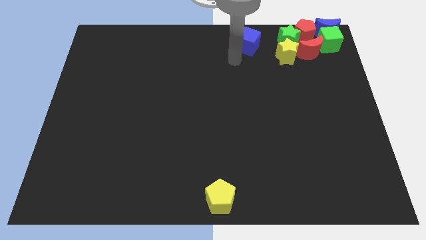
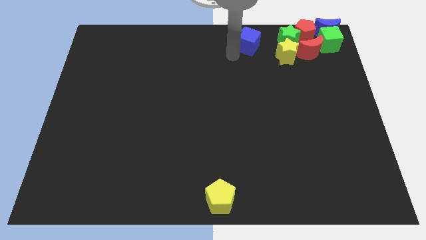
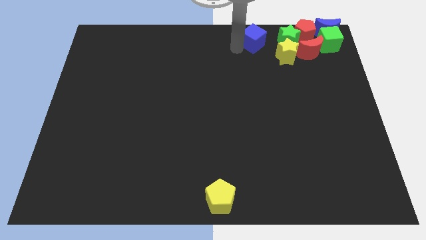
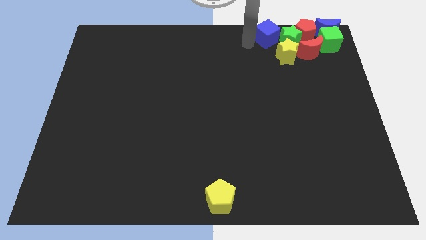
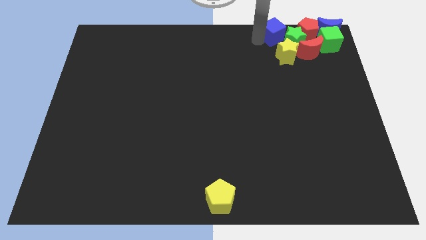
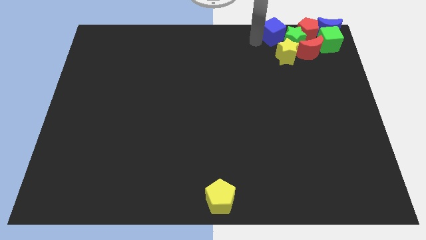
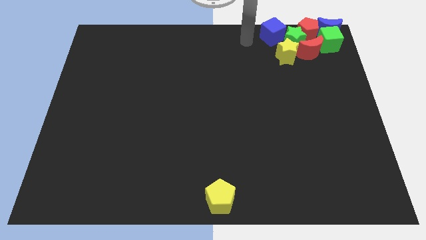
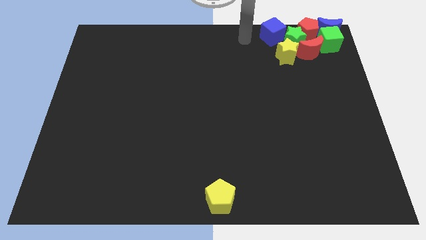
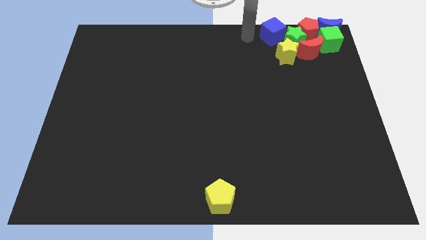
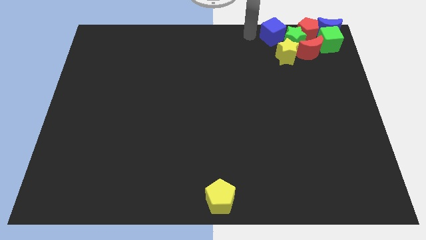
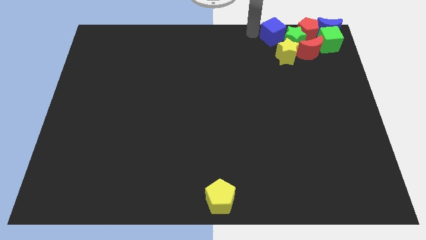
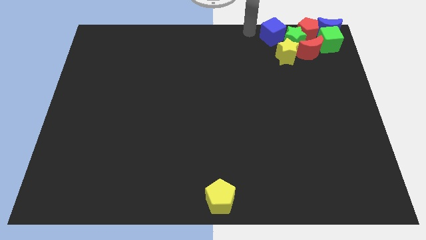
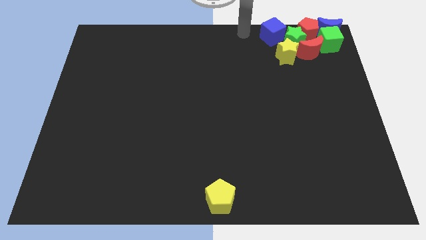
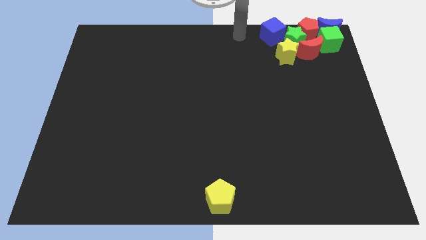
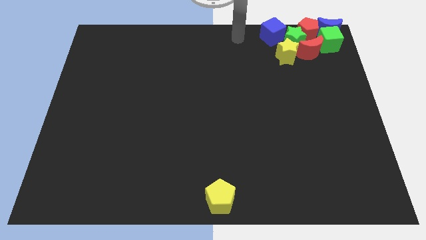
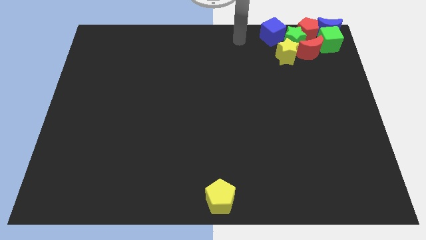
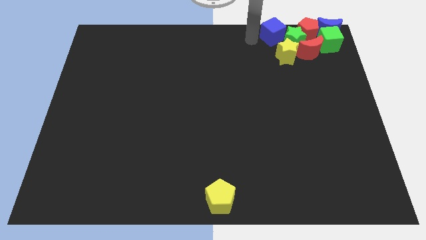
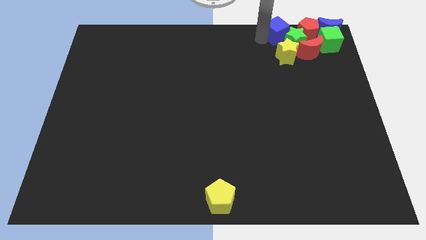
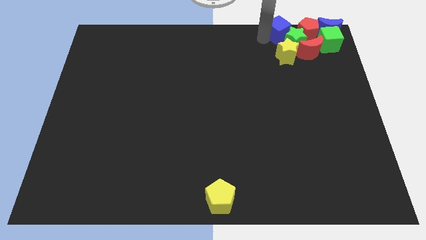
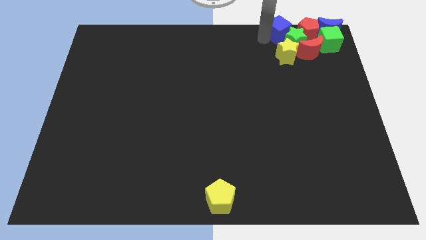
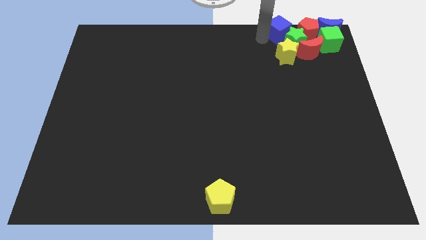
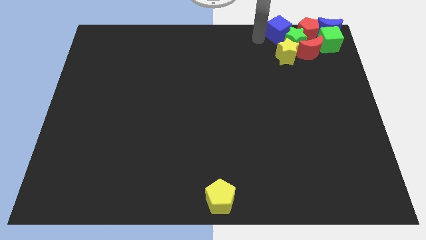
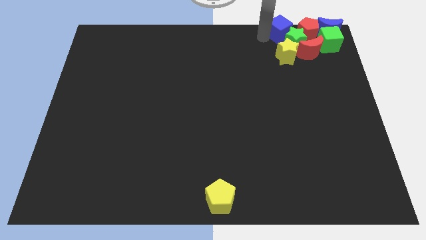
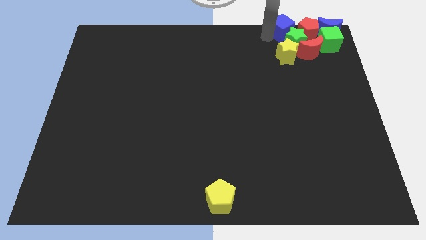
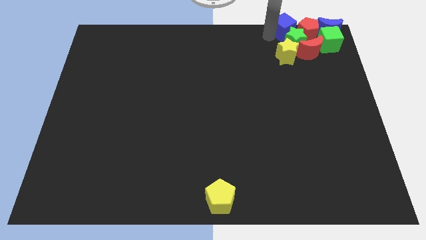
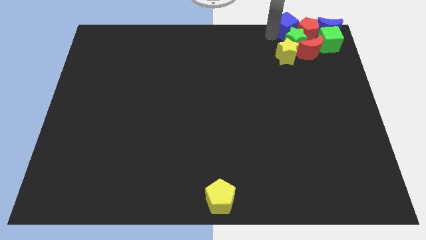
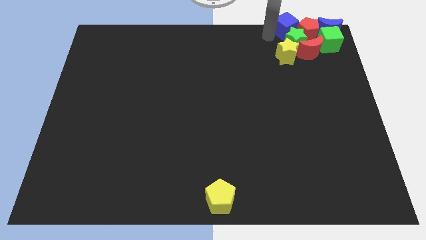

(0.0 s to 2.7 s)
push the blue cube into the green star

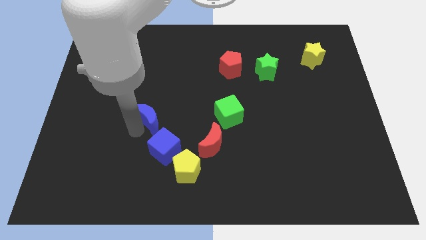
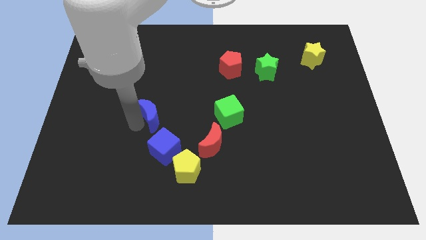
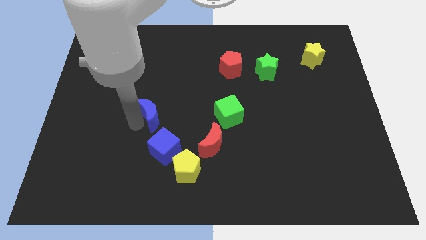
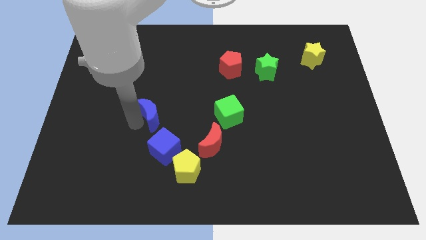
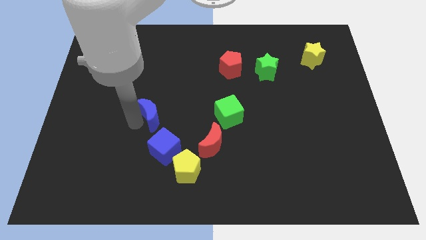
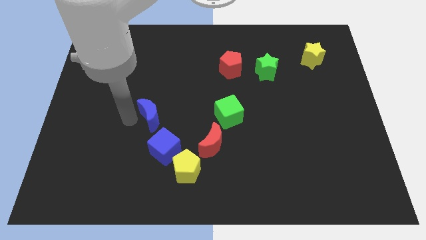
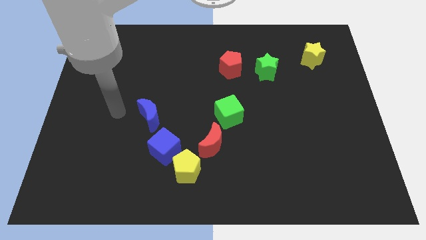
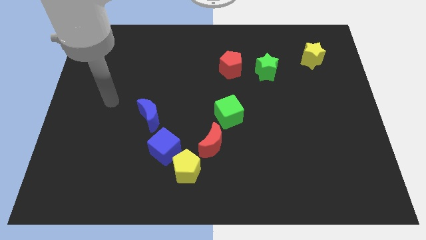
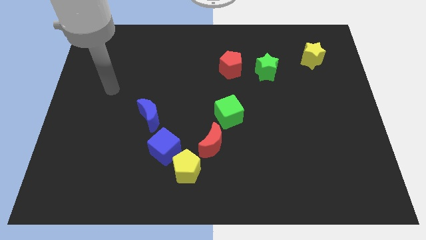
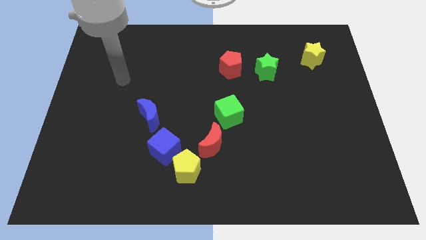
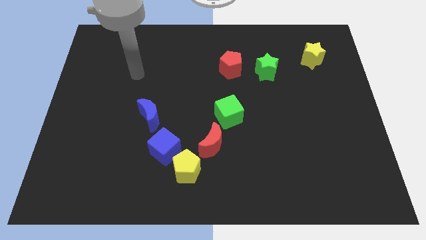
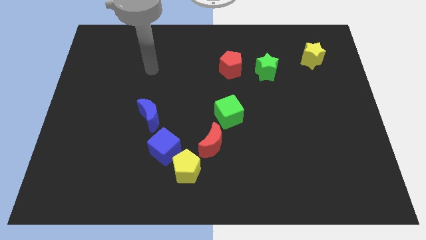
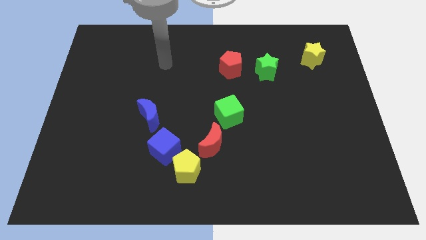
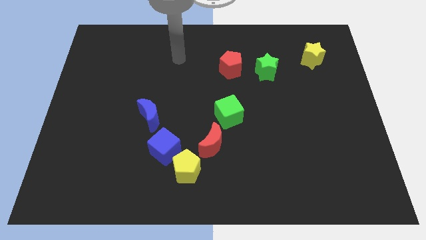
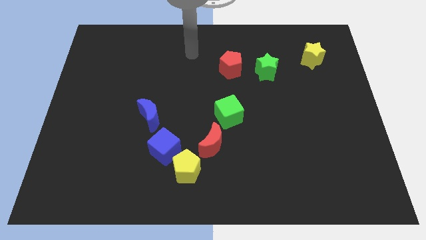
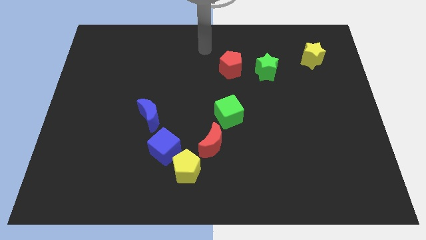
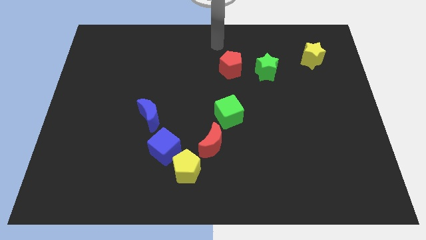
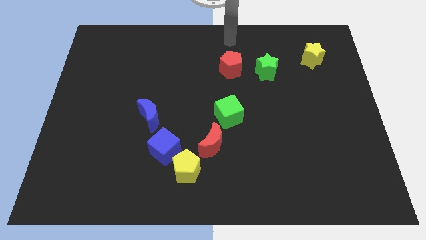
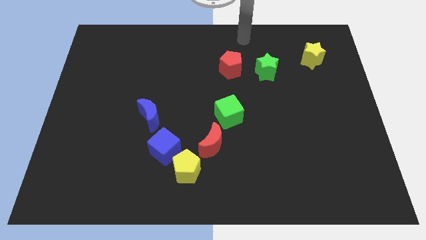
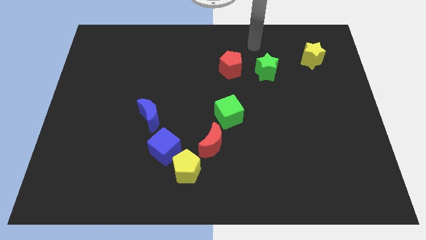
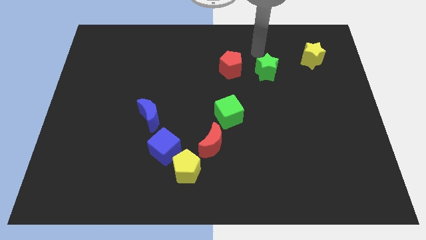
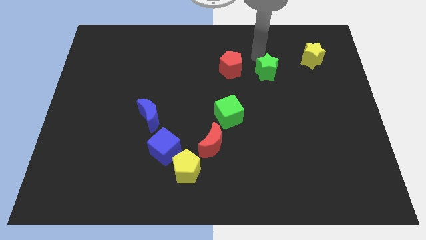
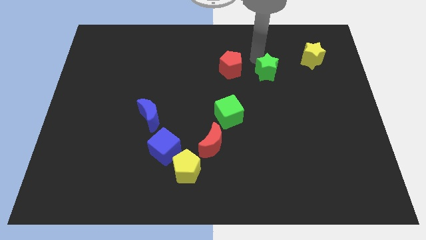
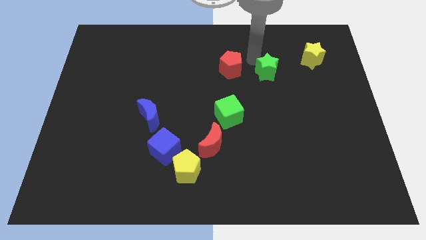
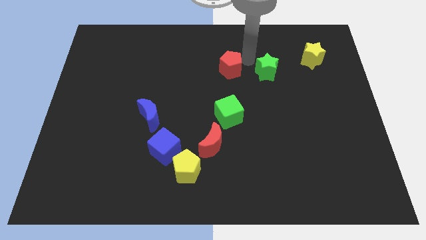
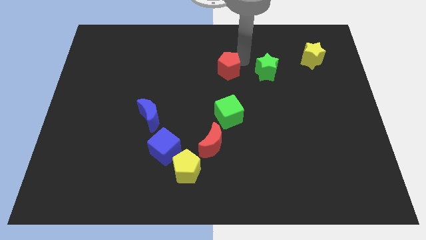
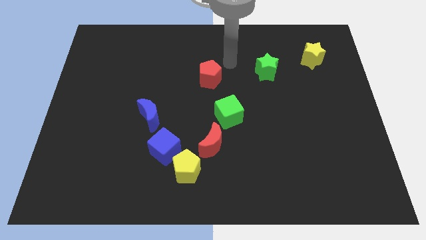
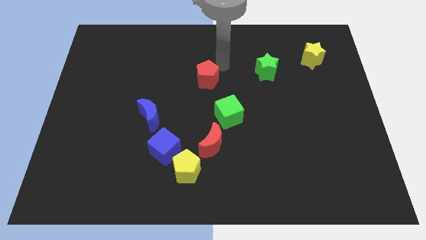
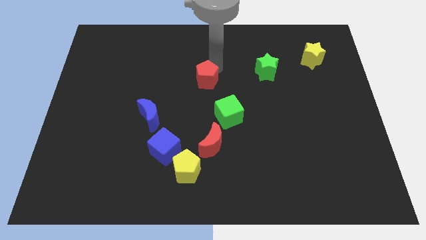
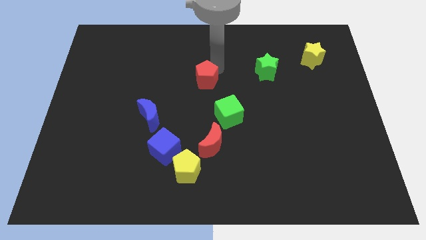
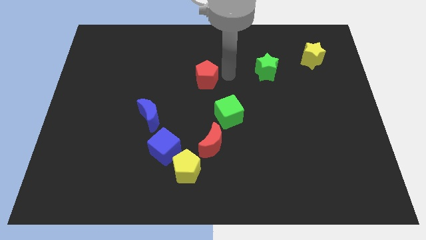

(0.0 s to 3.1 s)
move the red pentagon diagonally to the green cube

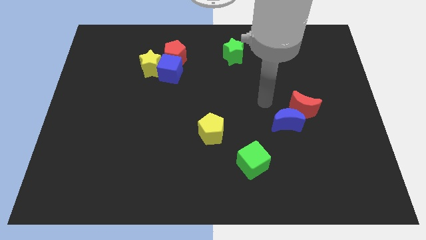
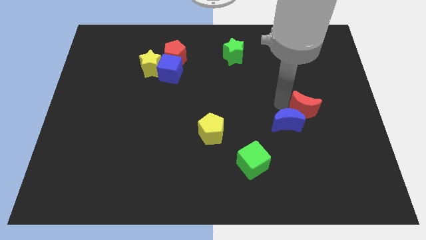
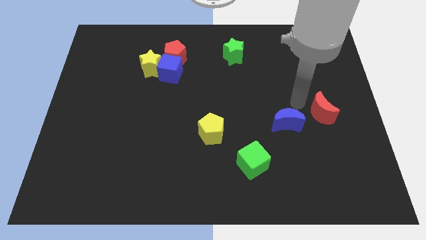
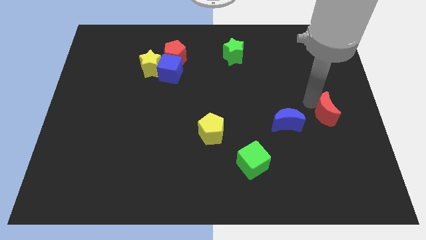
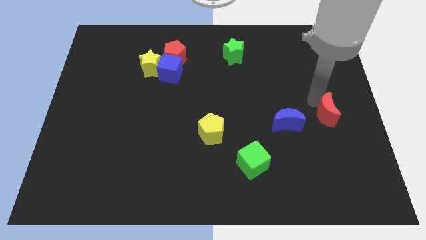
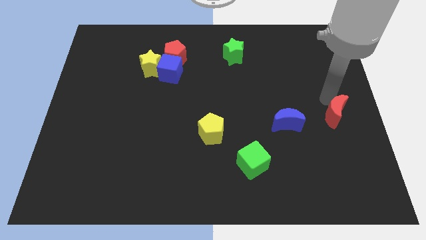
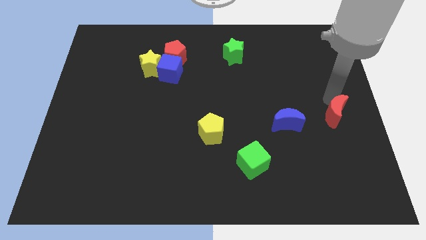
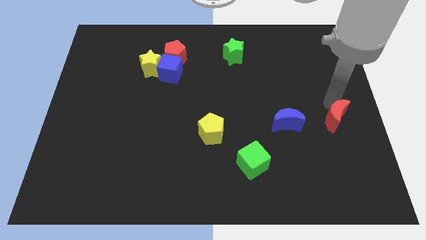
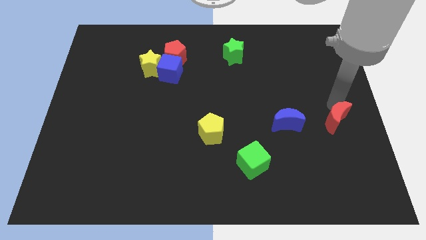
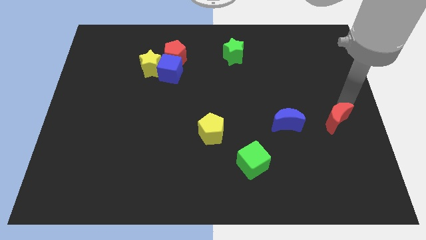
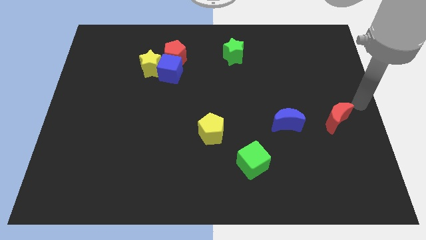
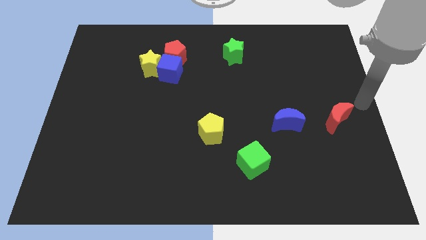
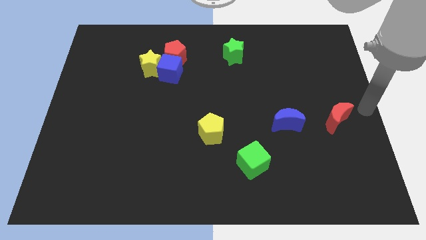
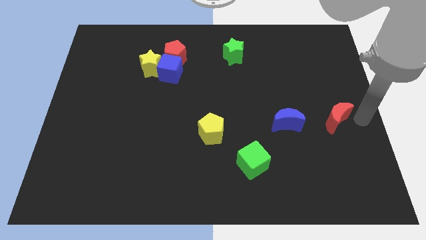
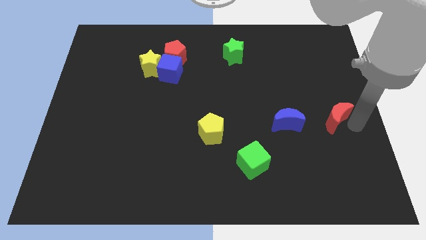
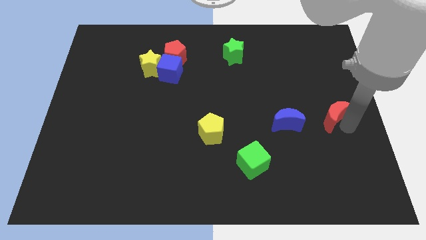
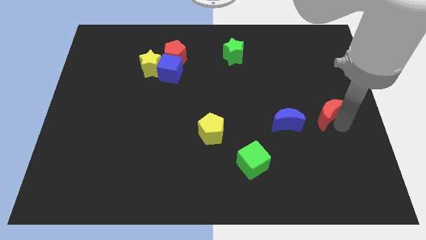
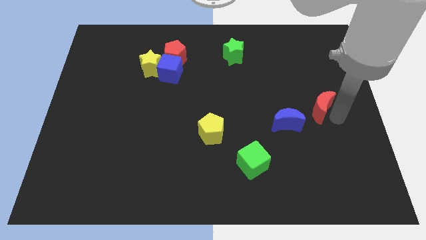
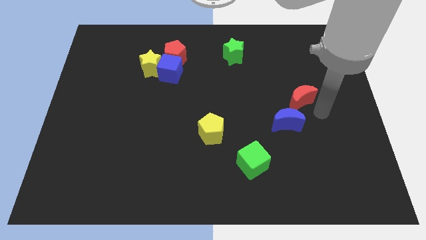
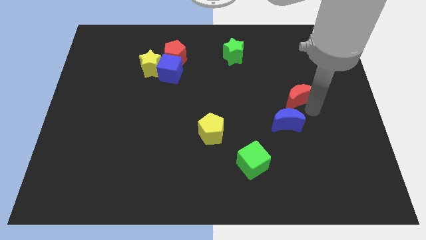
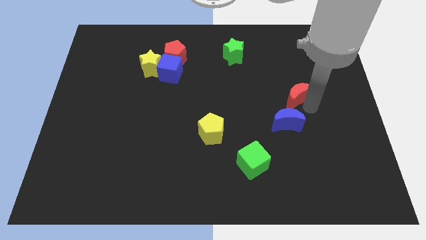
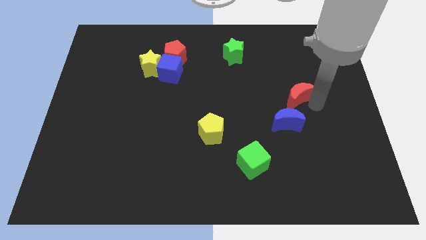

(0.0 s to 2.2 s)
slightly push red crescent towards the center right

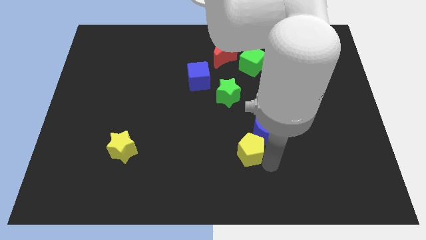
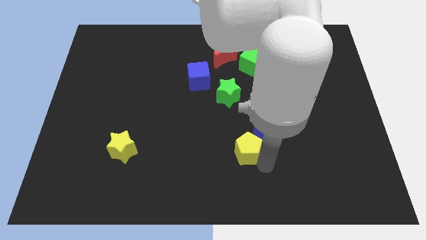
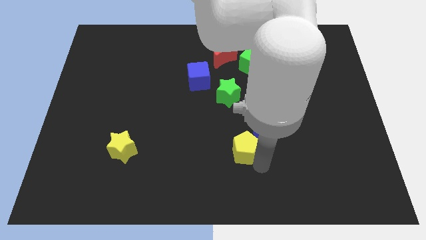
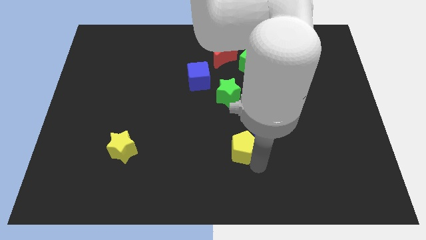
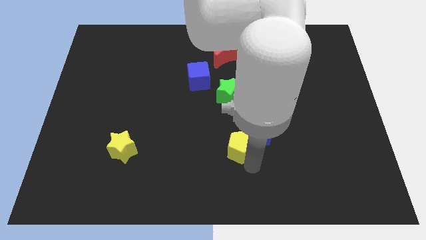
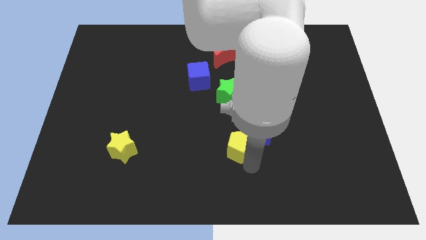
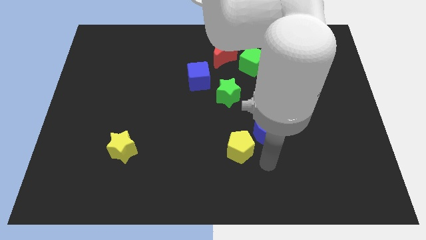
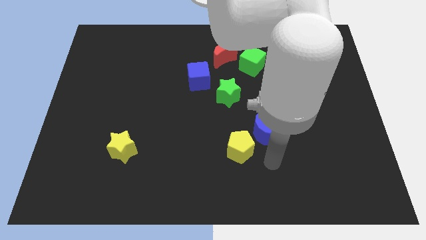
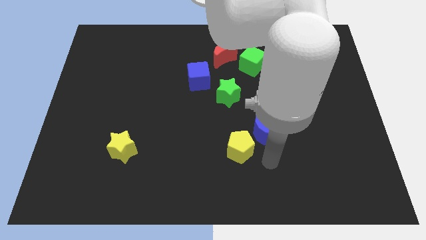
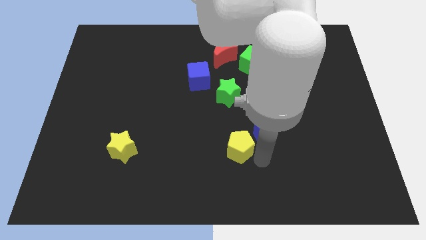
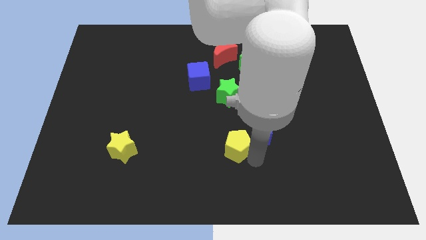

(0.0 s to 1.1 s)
place the yellow pentagon towards the bottom left side of the blue crescent
